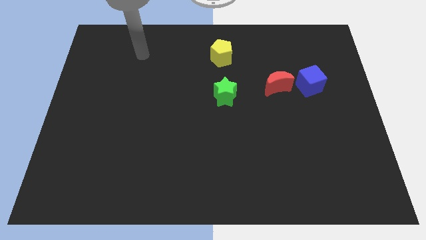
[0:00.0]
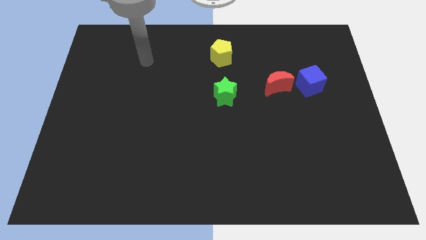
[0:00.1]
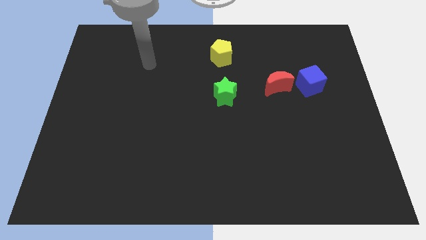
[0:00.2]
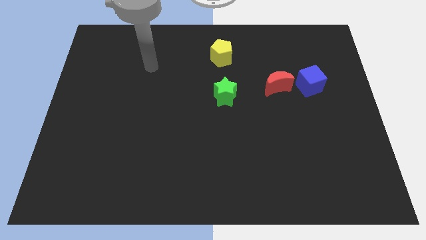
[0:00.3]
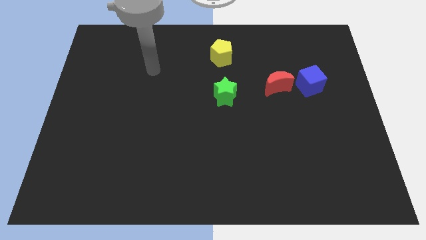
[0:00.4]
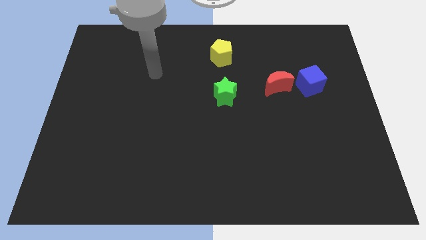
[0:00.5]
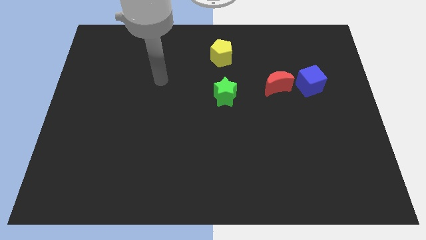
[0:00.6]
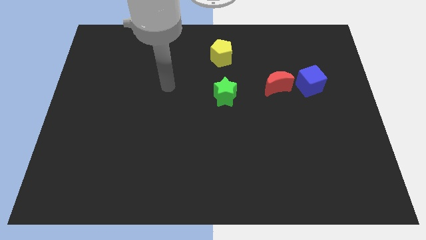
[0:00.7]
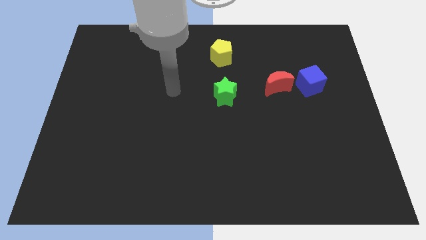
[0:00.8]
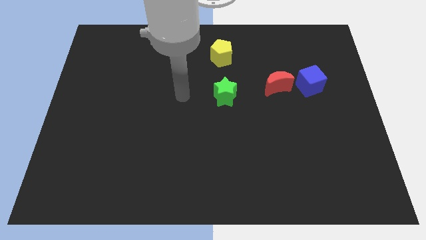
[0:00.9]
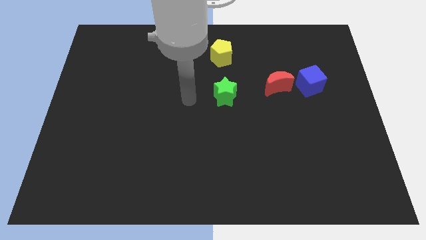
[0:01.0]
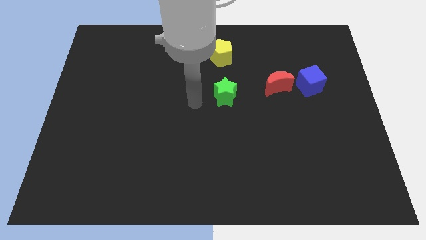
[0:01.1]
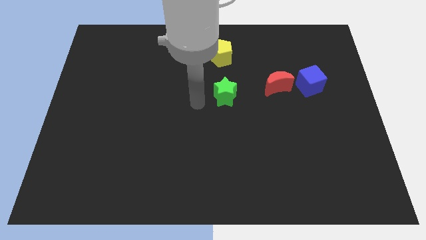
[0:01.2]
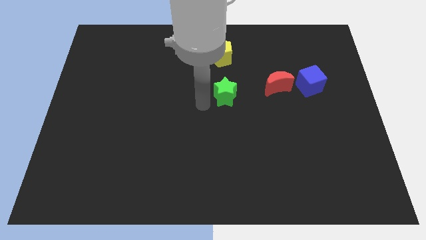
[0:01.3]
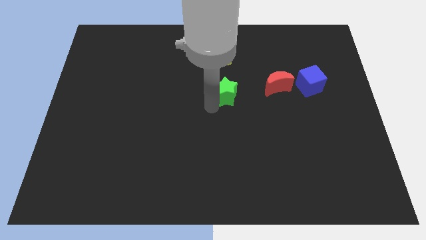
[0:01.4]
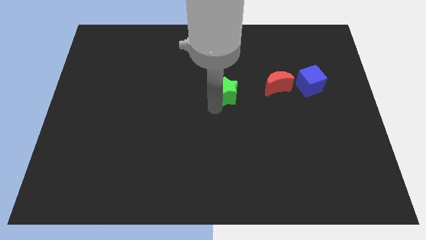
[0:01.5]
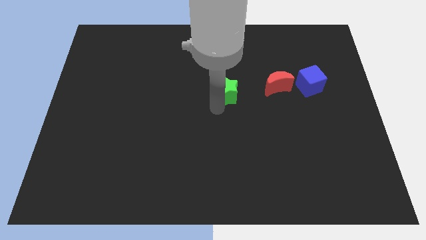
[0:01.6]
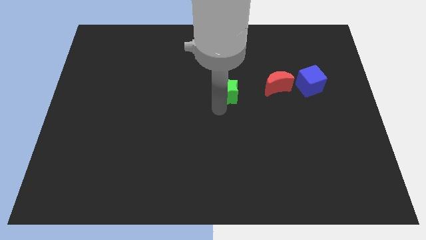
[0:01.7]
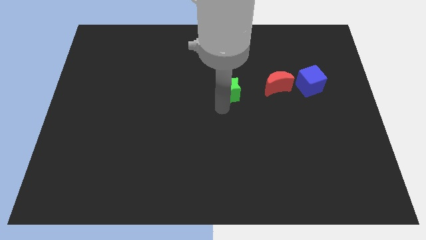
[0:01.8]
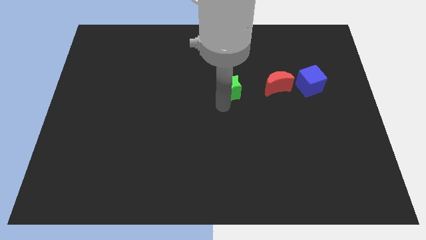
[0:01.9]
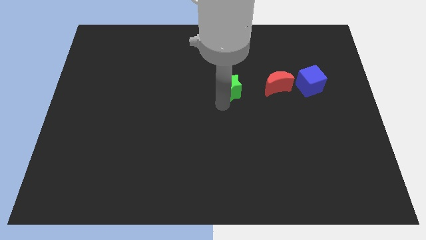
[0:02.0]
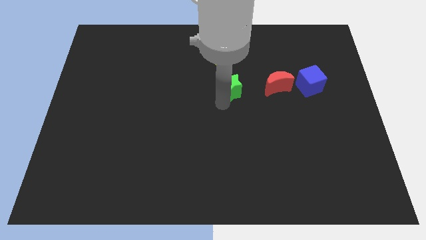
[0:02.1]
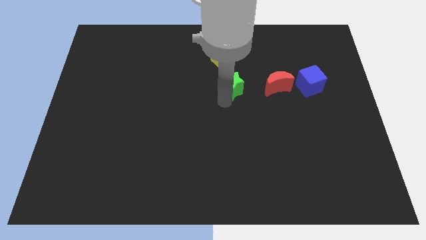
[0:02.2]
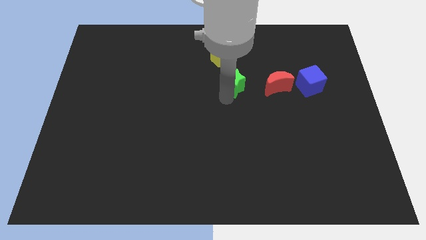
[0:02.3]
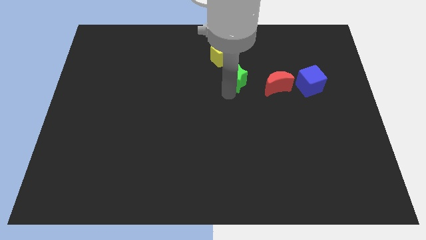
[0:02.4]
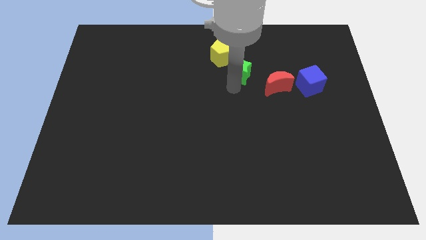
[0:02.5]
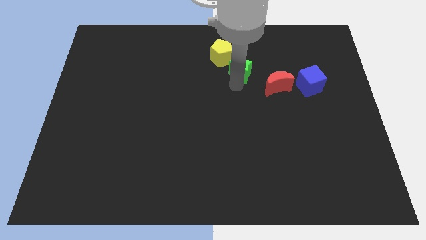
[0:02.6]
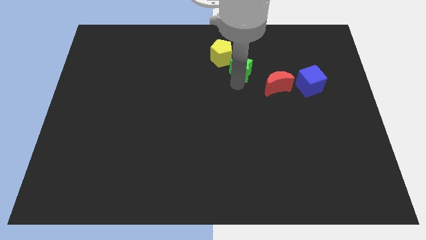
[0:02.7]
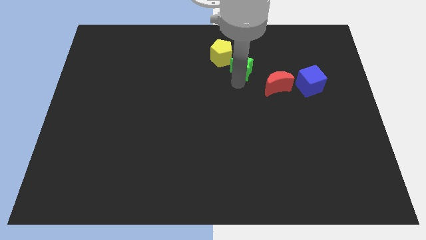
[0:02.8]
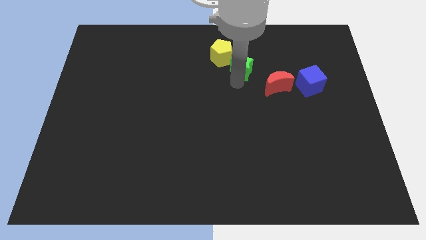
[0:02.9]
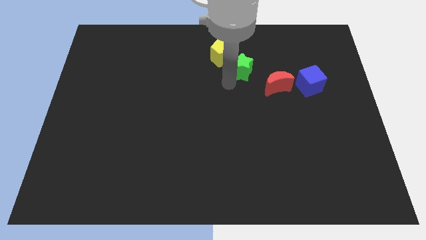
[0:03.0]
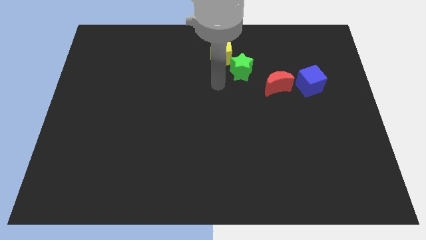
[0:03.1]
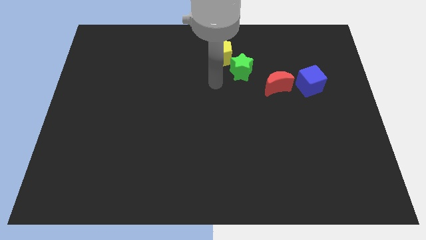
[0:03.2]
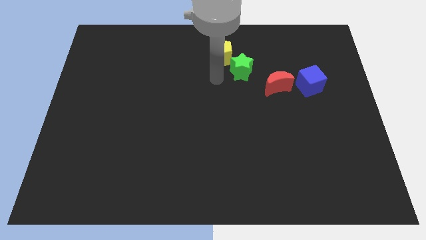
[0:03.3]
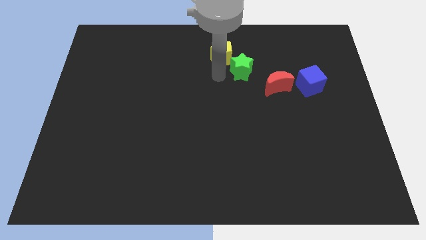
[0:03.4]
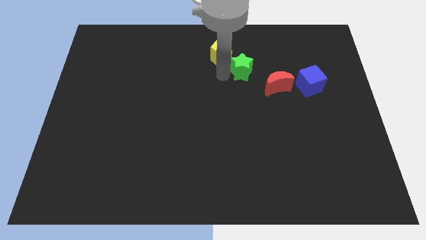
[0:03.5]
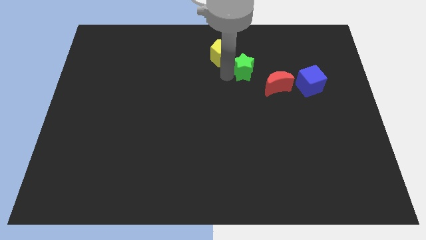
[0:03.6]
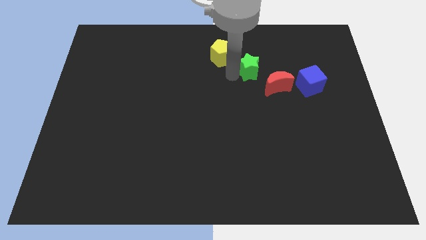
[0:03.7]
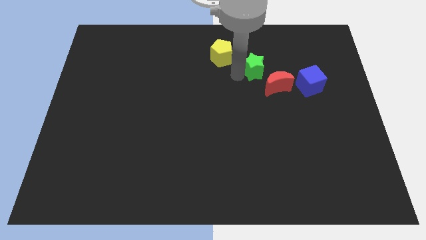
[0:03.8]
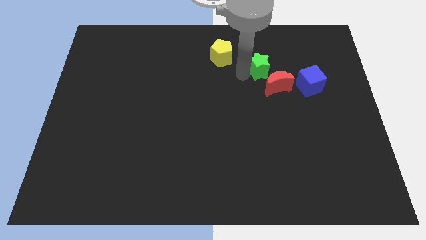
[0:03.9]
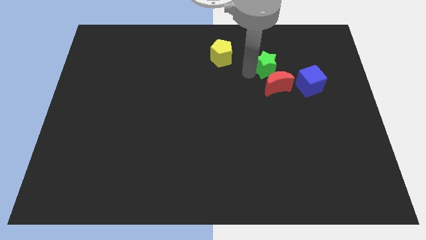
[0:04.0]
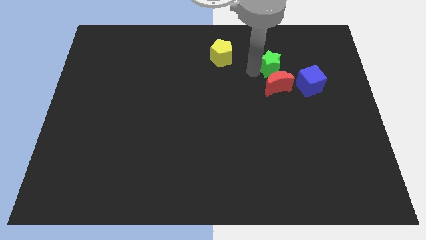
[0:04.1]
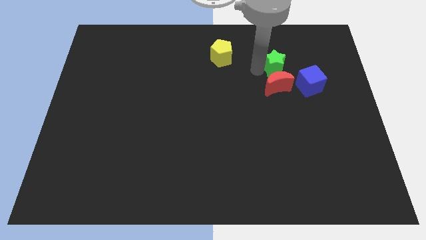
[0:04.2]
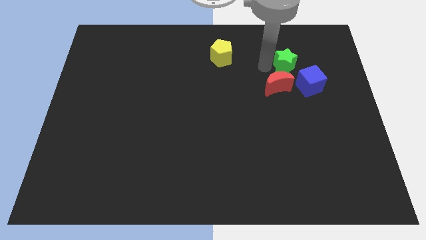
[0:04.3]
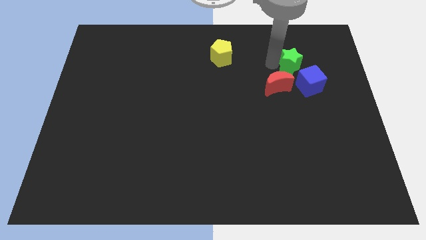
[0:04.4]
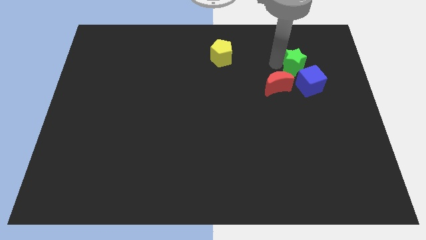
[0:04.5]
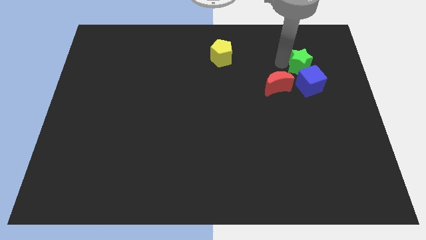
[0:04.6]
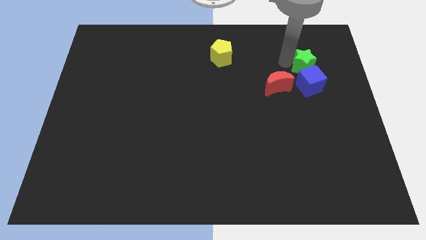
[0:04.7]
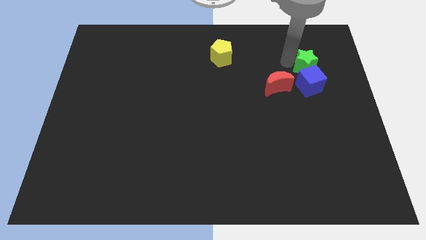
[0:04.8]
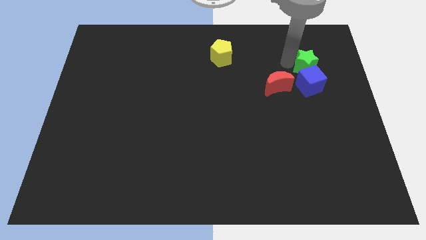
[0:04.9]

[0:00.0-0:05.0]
push the star to the cube

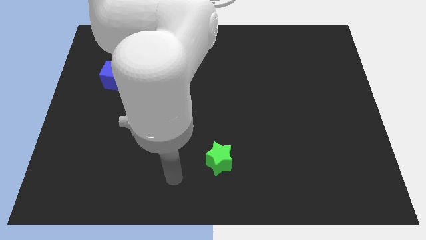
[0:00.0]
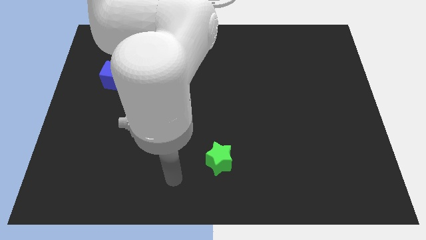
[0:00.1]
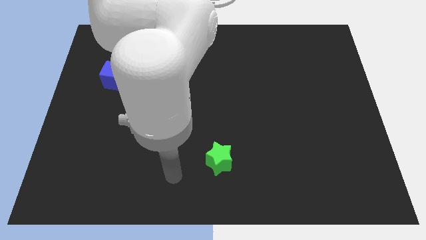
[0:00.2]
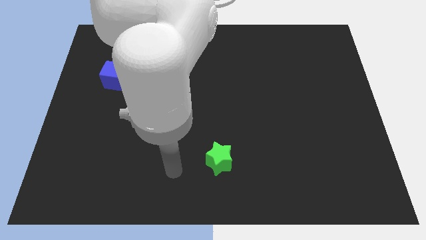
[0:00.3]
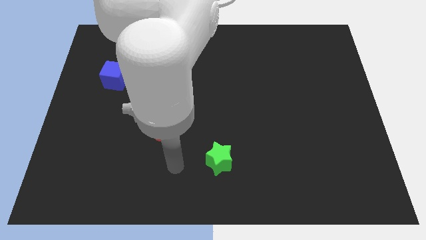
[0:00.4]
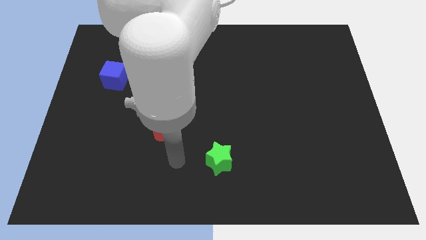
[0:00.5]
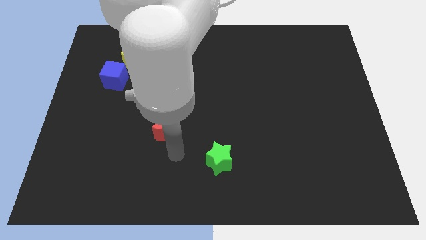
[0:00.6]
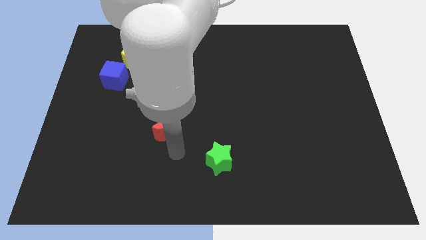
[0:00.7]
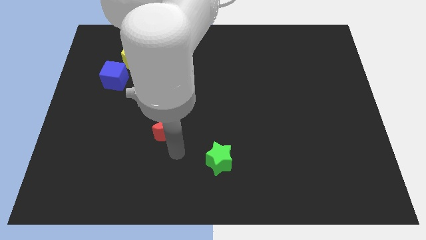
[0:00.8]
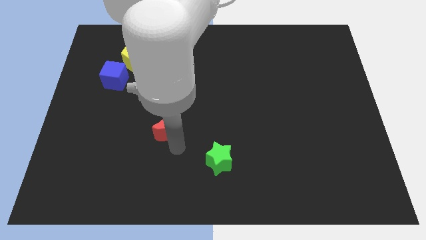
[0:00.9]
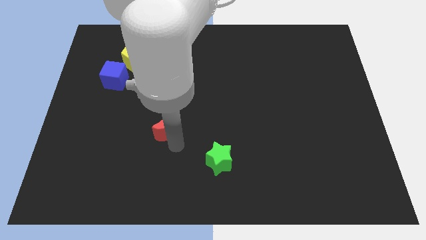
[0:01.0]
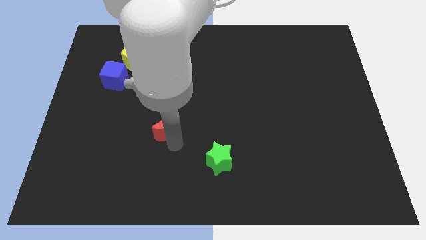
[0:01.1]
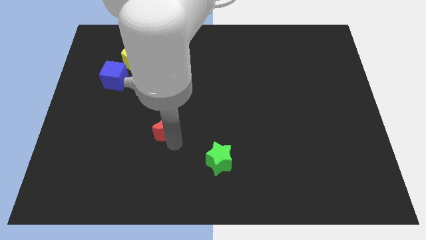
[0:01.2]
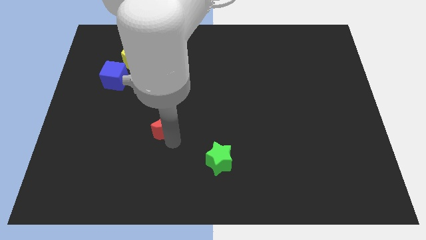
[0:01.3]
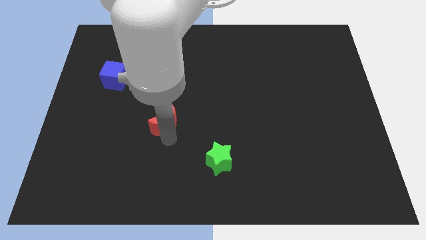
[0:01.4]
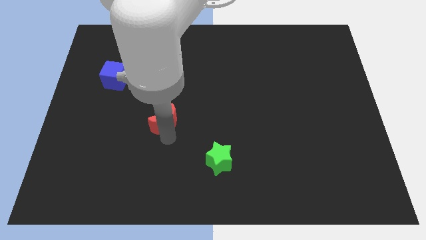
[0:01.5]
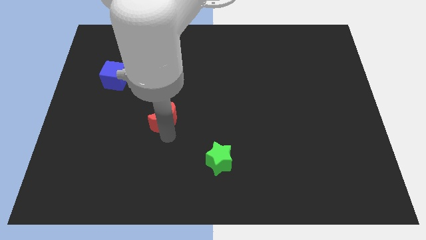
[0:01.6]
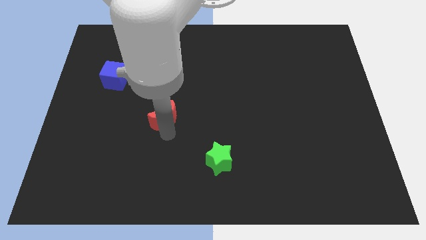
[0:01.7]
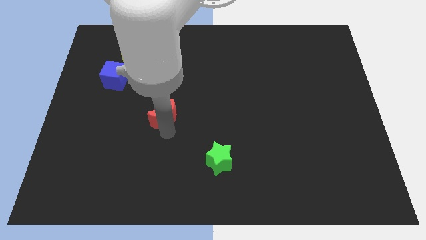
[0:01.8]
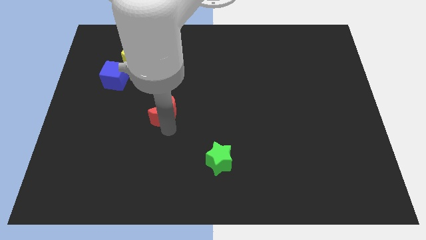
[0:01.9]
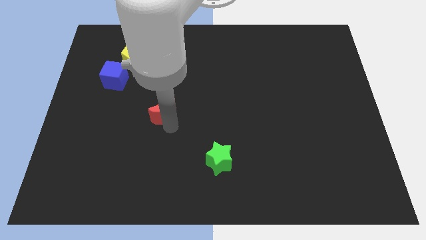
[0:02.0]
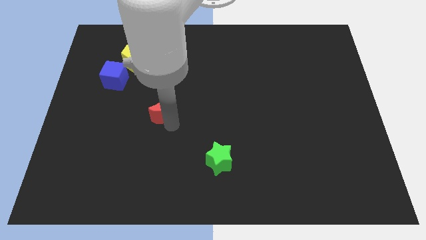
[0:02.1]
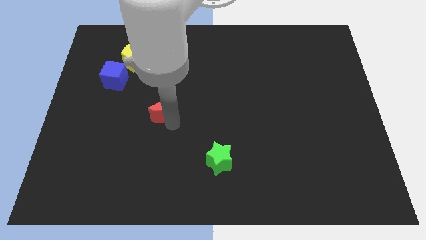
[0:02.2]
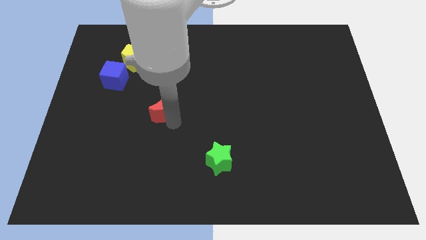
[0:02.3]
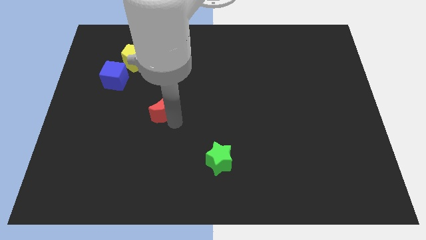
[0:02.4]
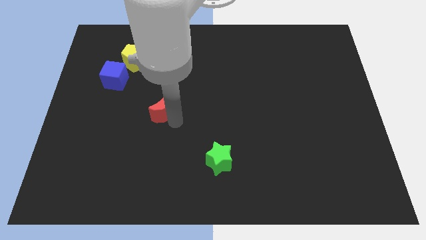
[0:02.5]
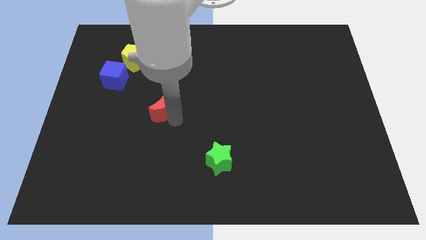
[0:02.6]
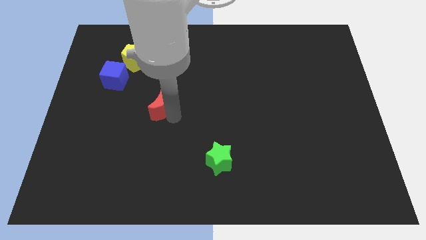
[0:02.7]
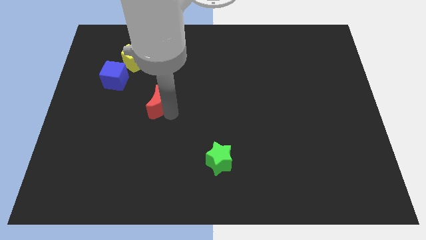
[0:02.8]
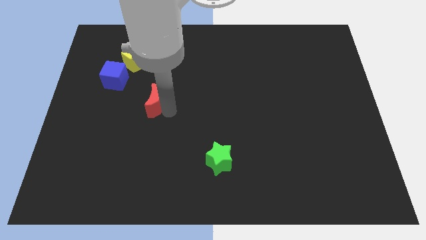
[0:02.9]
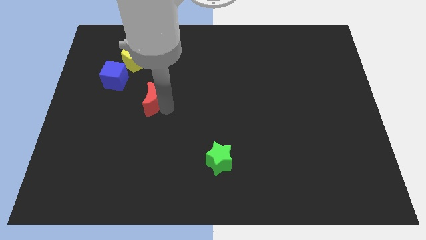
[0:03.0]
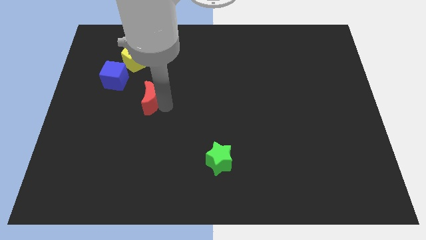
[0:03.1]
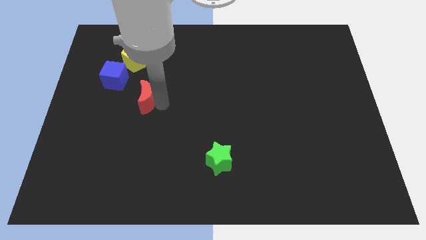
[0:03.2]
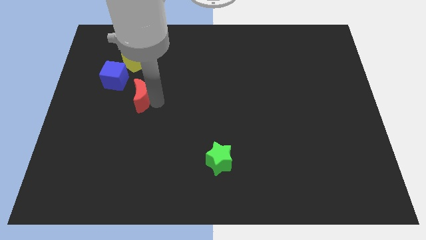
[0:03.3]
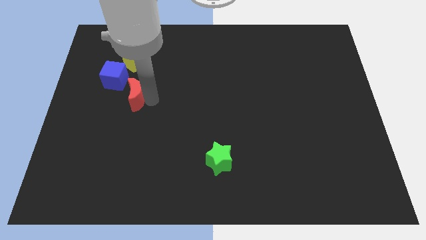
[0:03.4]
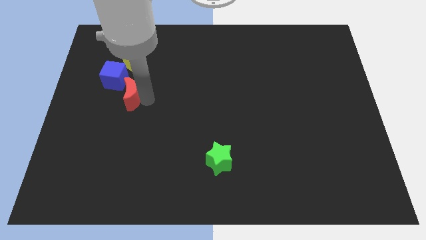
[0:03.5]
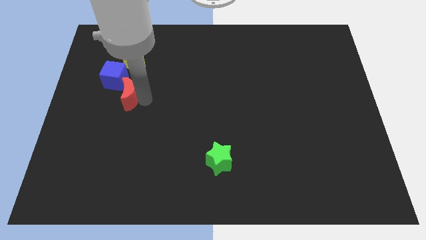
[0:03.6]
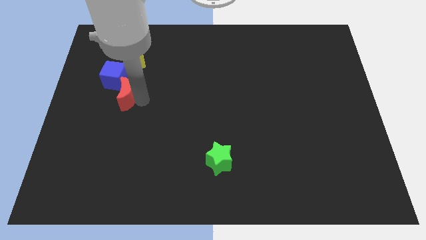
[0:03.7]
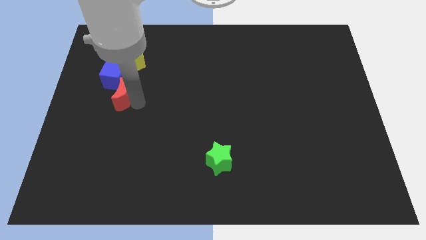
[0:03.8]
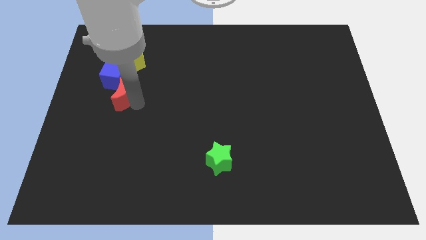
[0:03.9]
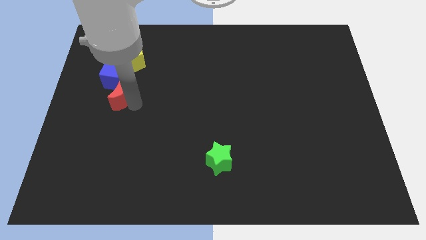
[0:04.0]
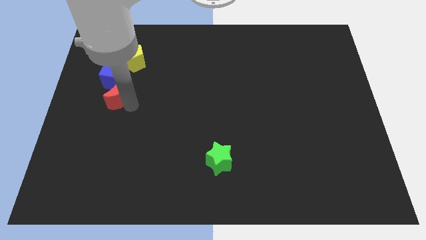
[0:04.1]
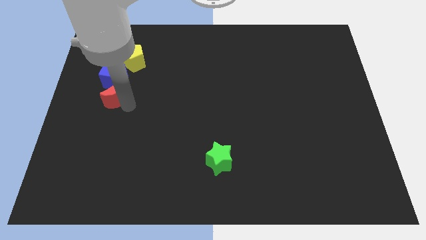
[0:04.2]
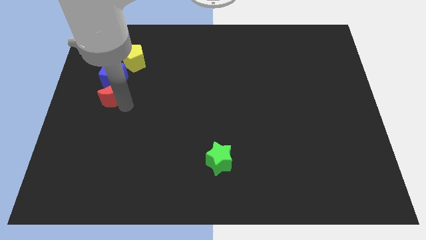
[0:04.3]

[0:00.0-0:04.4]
move the red block towards the blue cube
